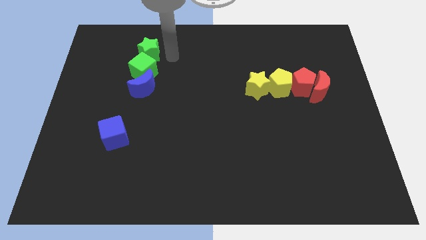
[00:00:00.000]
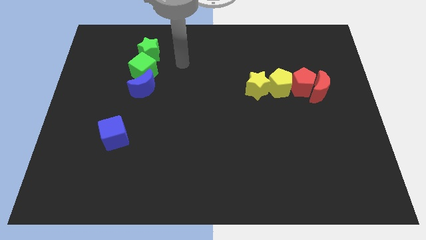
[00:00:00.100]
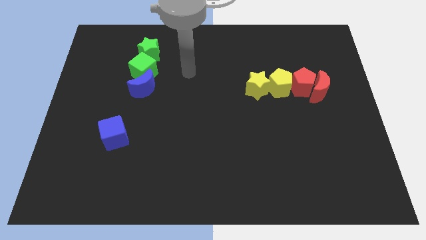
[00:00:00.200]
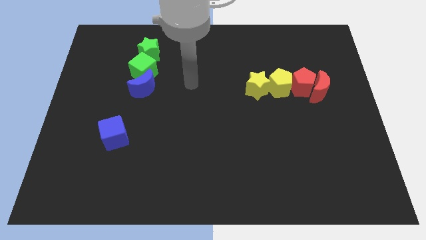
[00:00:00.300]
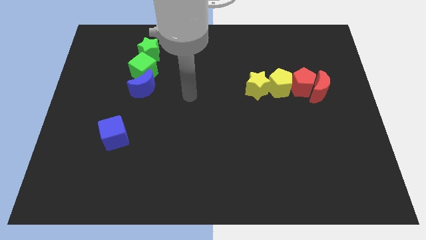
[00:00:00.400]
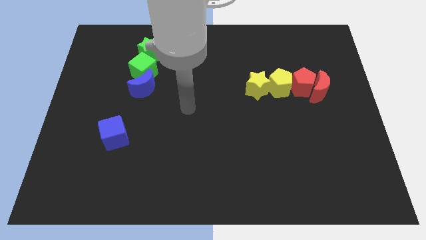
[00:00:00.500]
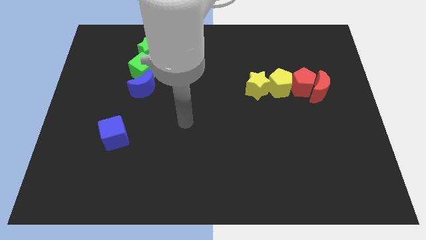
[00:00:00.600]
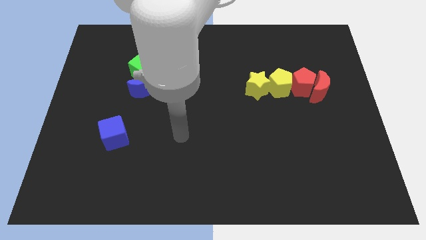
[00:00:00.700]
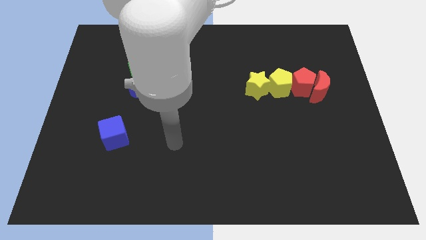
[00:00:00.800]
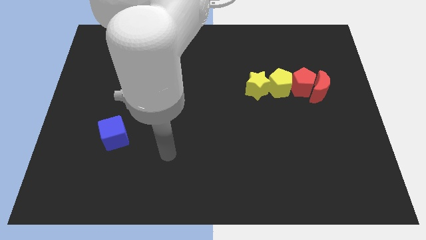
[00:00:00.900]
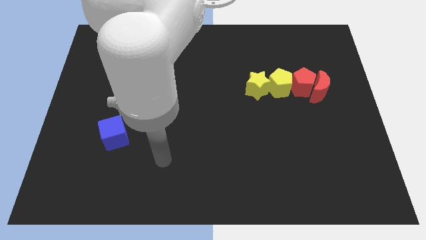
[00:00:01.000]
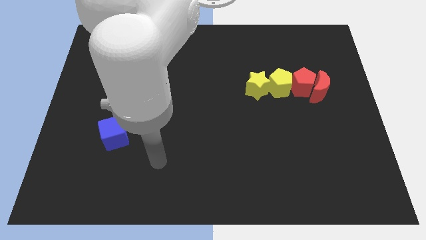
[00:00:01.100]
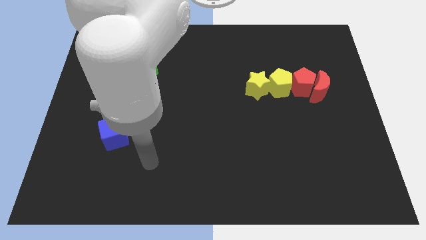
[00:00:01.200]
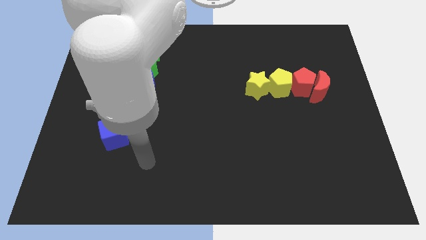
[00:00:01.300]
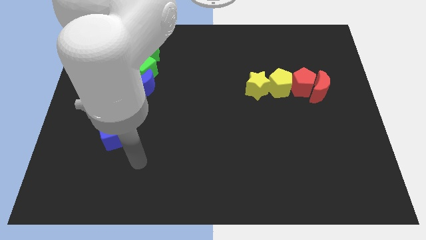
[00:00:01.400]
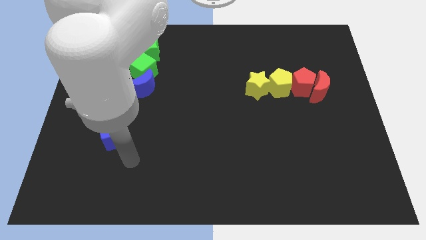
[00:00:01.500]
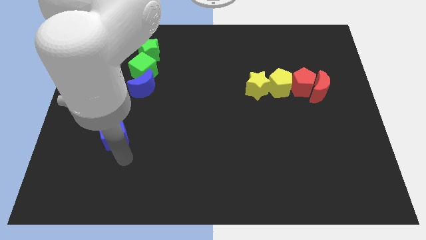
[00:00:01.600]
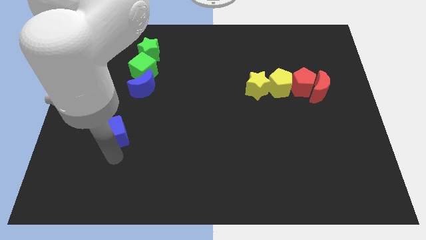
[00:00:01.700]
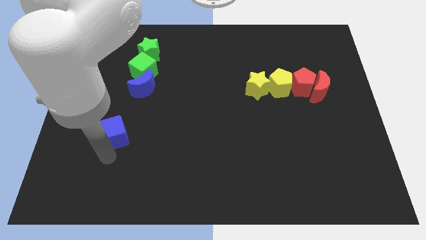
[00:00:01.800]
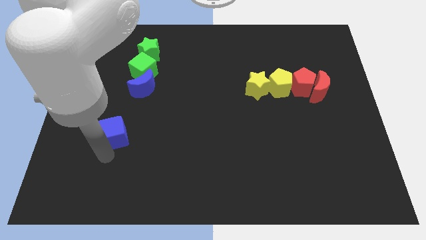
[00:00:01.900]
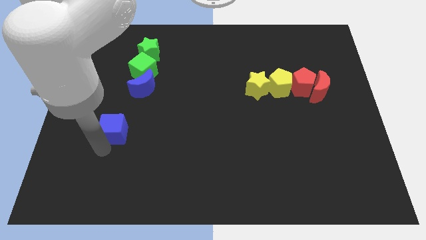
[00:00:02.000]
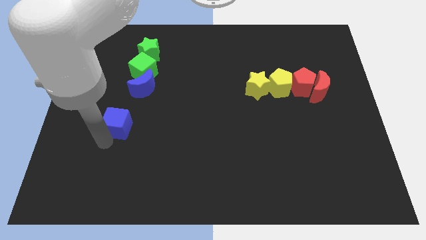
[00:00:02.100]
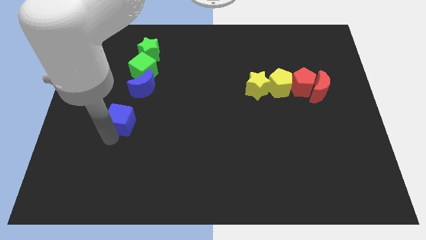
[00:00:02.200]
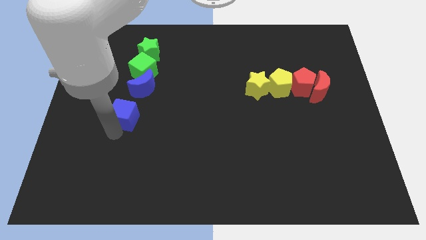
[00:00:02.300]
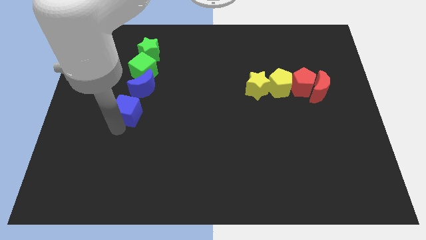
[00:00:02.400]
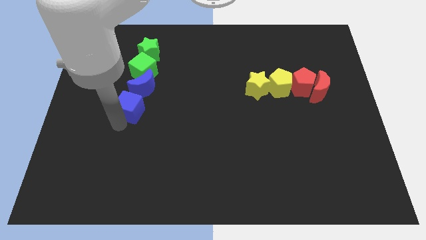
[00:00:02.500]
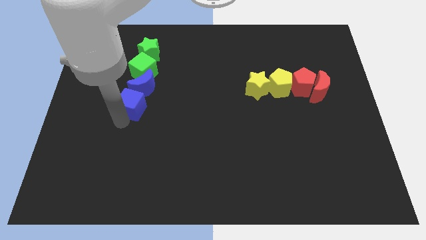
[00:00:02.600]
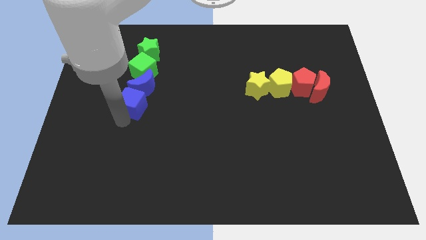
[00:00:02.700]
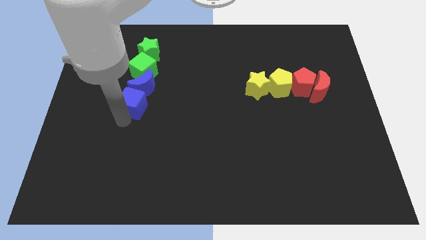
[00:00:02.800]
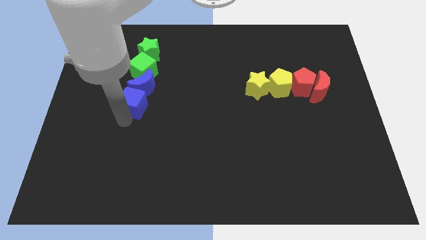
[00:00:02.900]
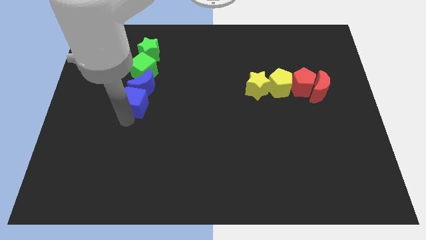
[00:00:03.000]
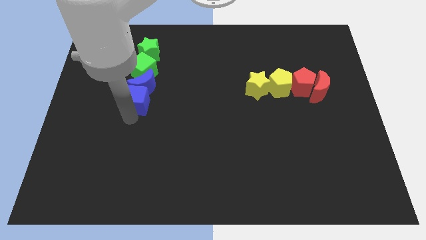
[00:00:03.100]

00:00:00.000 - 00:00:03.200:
move the blue cube below to the blue moon

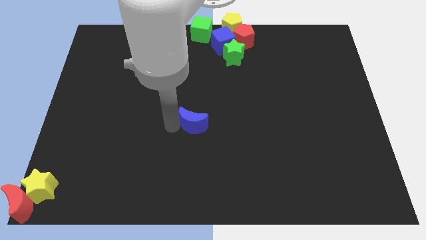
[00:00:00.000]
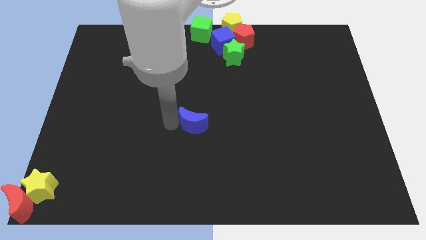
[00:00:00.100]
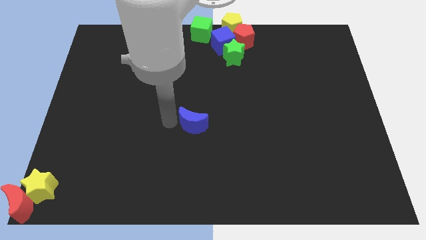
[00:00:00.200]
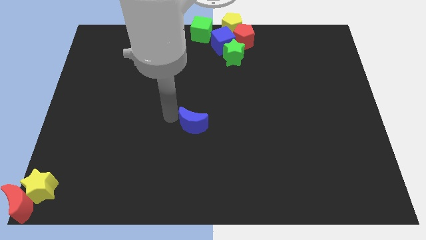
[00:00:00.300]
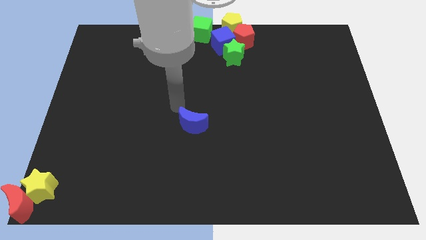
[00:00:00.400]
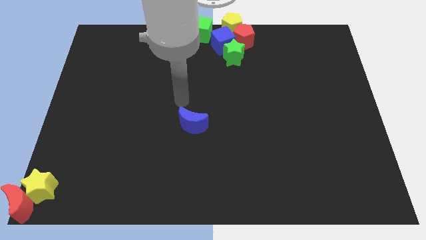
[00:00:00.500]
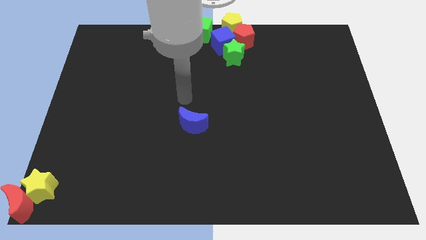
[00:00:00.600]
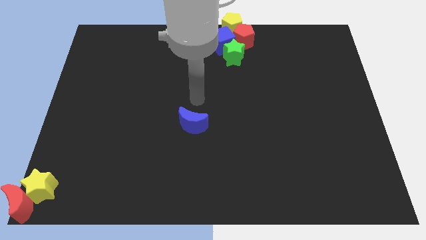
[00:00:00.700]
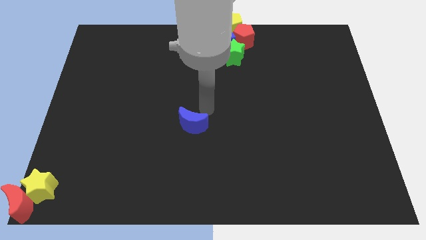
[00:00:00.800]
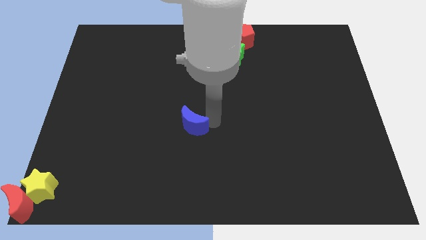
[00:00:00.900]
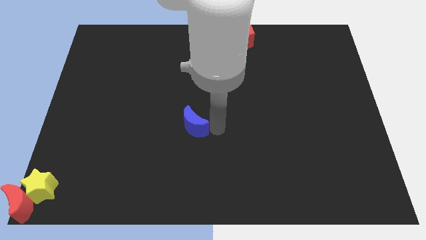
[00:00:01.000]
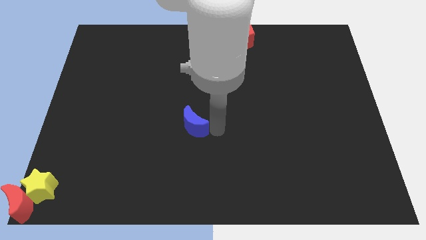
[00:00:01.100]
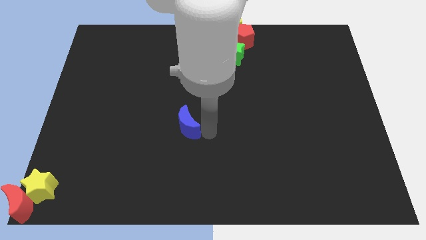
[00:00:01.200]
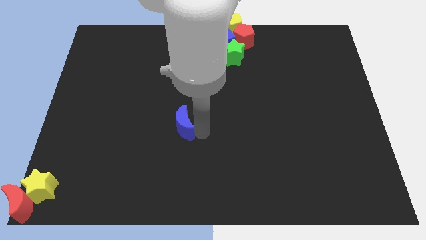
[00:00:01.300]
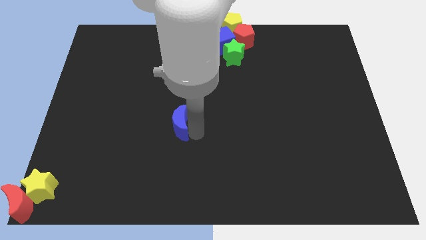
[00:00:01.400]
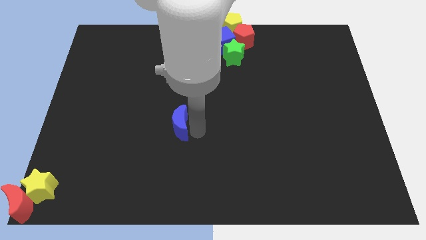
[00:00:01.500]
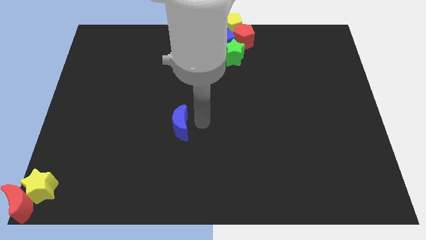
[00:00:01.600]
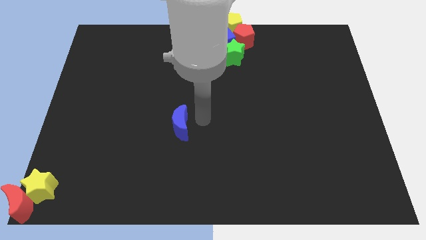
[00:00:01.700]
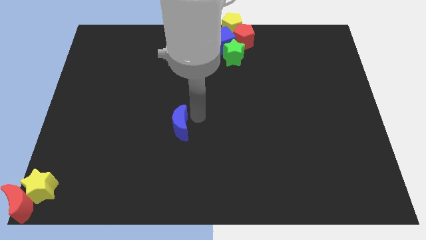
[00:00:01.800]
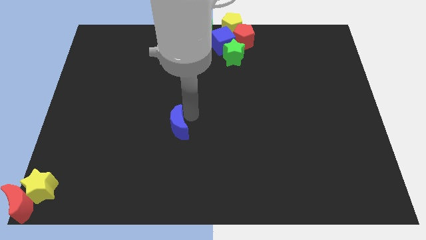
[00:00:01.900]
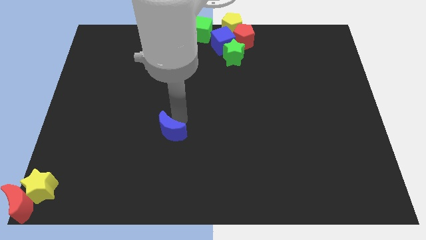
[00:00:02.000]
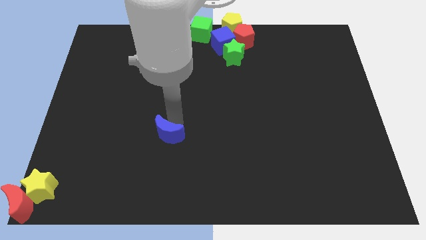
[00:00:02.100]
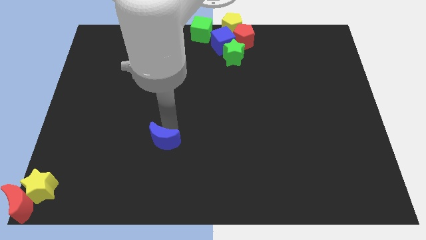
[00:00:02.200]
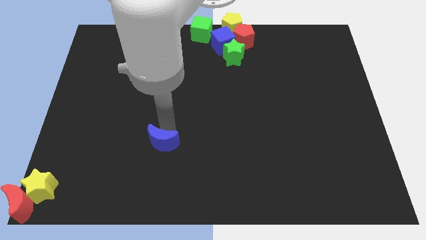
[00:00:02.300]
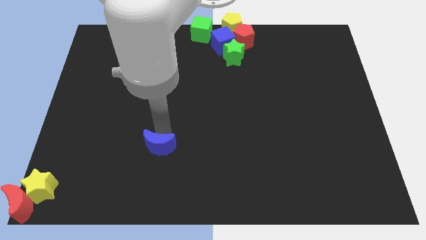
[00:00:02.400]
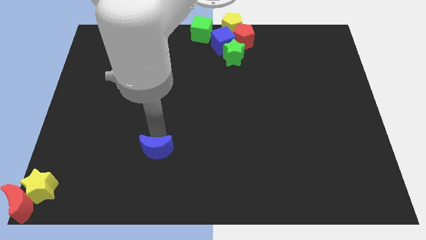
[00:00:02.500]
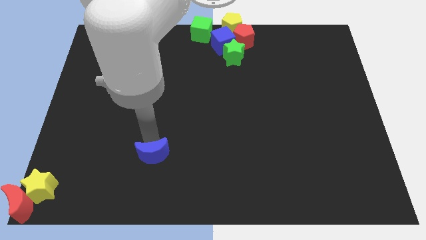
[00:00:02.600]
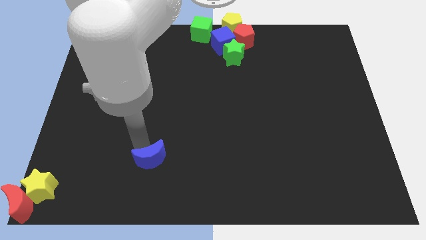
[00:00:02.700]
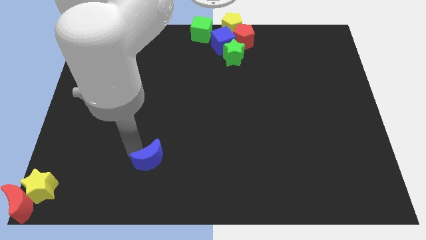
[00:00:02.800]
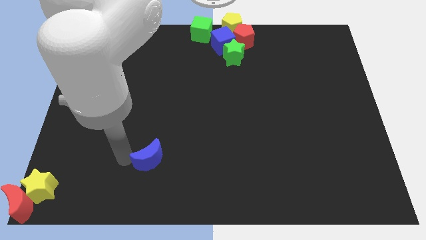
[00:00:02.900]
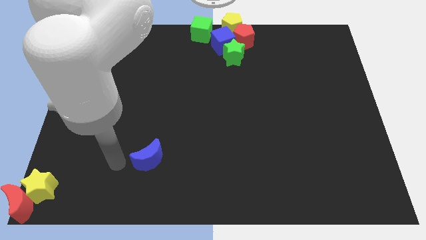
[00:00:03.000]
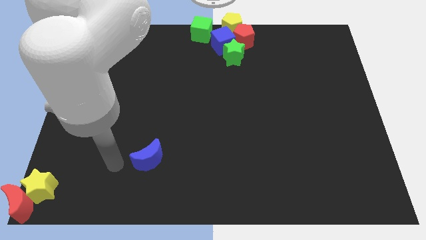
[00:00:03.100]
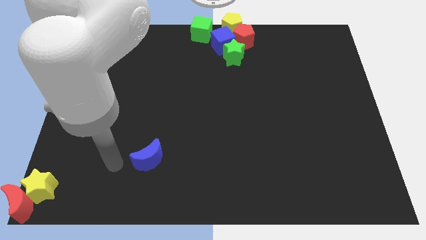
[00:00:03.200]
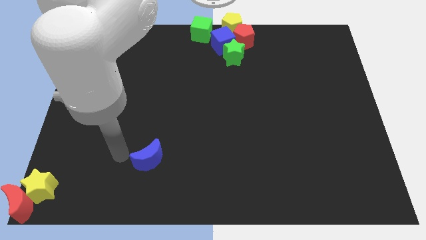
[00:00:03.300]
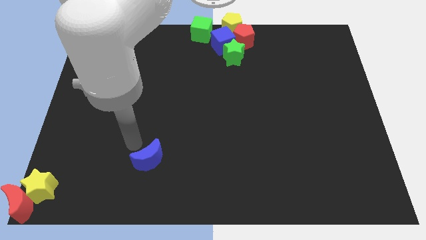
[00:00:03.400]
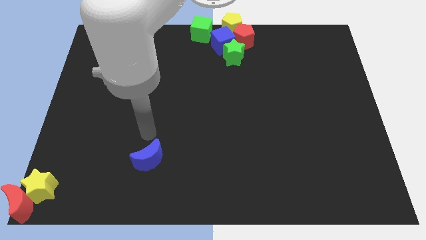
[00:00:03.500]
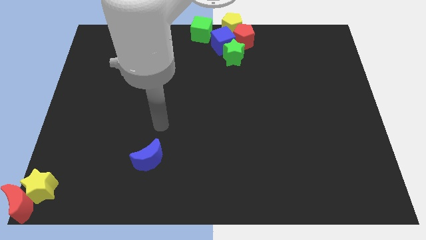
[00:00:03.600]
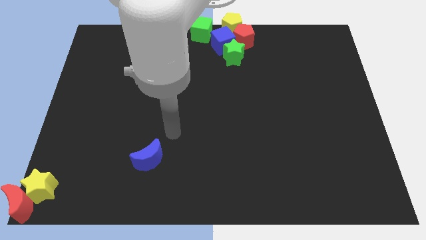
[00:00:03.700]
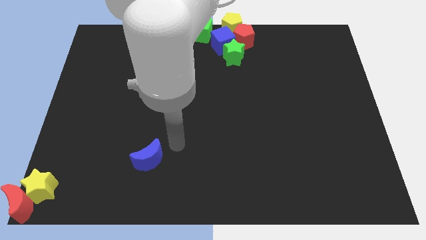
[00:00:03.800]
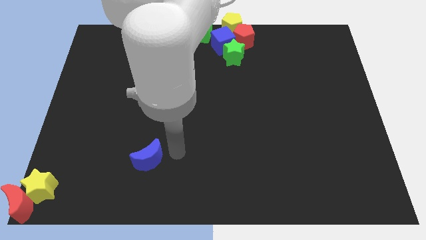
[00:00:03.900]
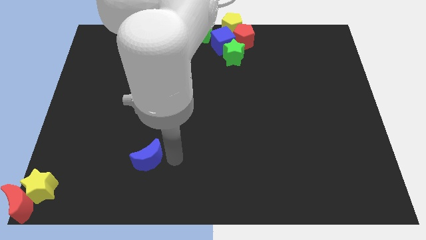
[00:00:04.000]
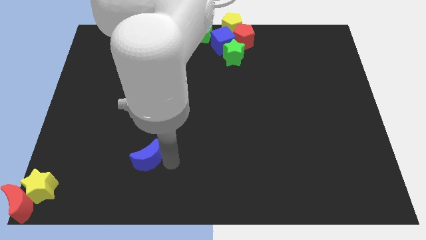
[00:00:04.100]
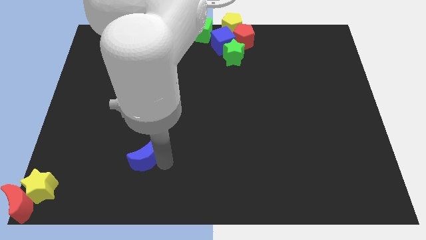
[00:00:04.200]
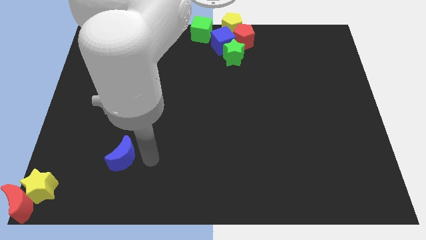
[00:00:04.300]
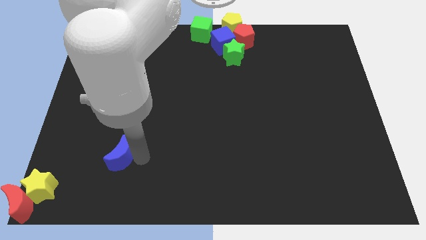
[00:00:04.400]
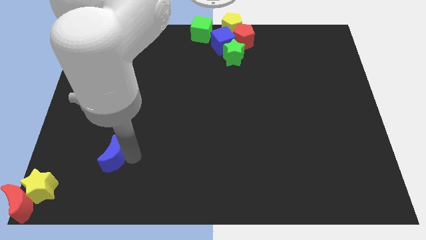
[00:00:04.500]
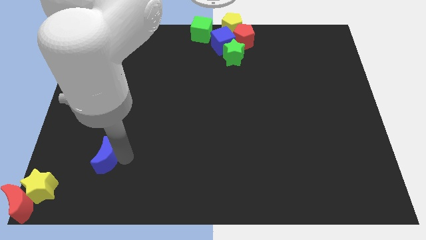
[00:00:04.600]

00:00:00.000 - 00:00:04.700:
slide the blue moon diagonally on the top right side of the yellow star

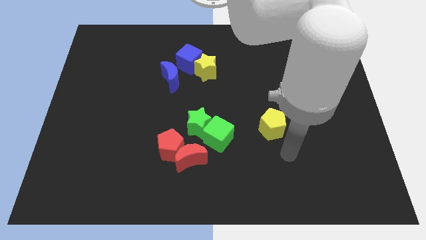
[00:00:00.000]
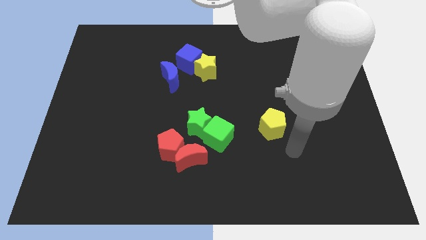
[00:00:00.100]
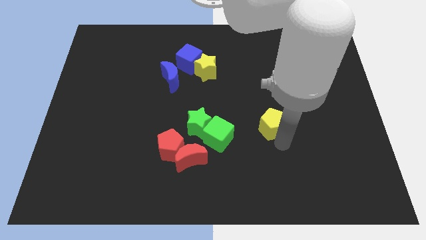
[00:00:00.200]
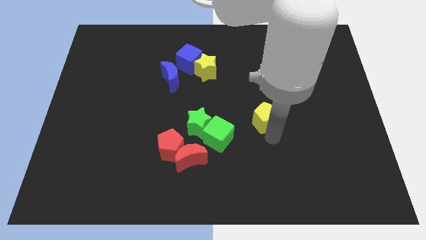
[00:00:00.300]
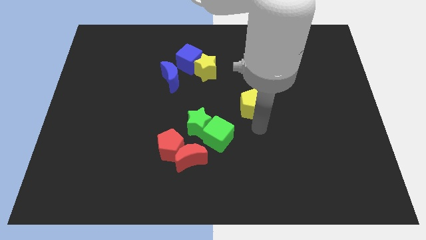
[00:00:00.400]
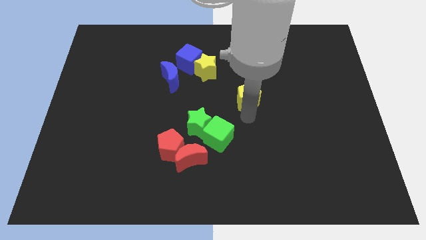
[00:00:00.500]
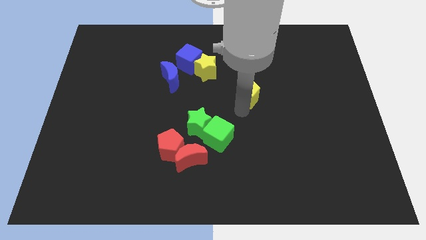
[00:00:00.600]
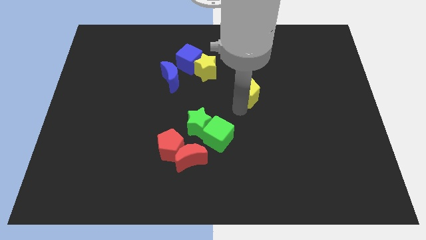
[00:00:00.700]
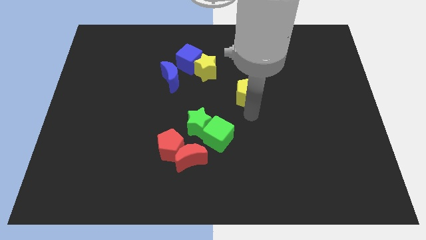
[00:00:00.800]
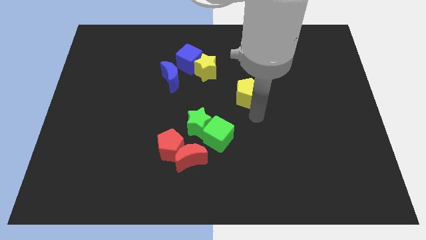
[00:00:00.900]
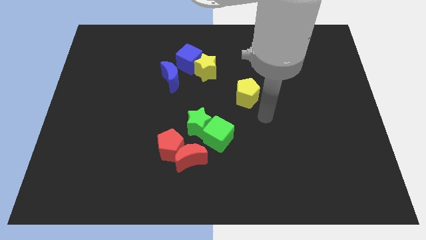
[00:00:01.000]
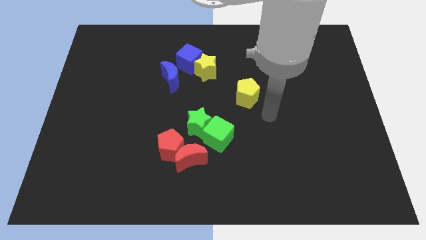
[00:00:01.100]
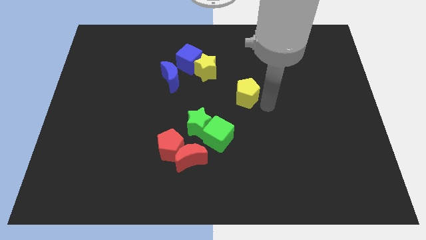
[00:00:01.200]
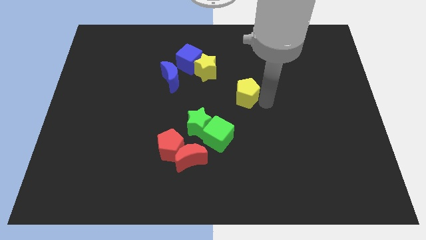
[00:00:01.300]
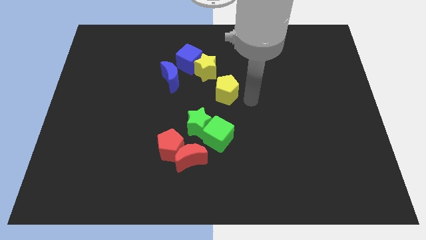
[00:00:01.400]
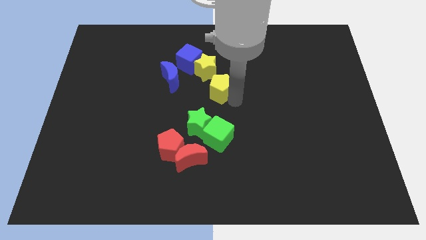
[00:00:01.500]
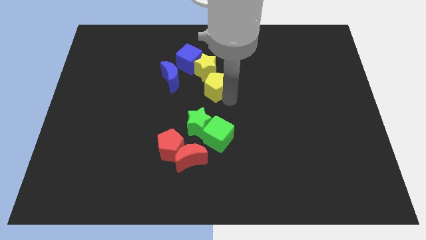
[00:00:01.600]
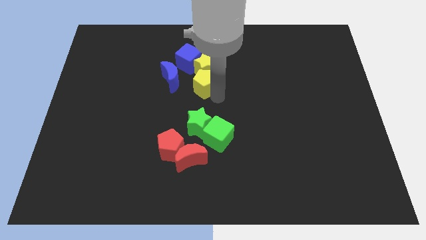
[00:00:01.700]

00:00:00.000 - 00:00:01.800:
place the yellow pentagon below yellow star
